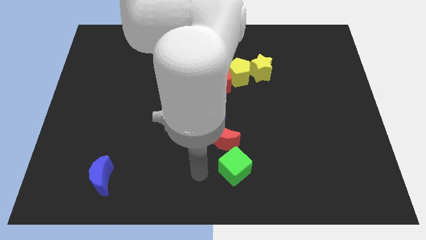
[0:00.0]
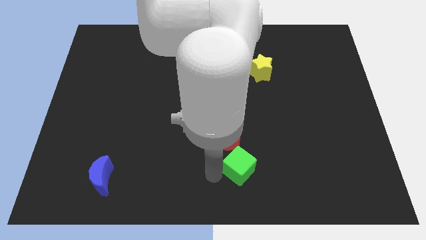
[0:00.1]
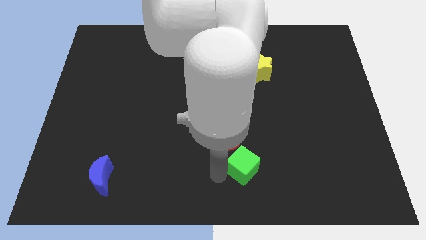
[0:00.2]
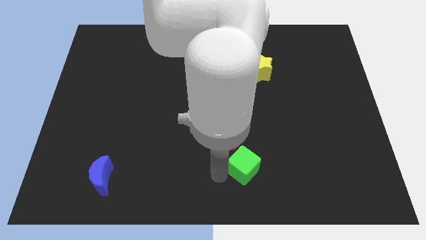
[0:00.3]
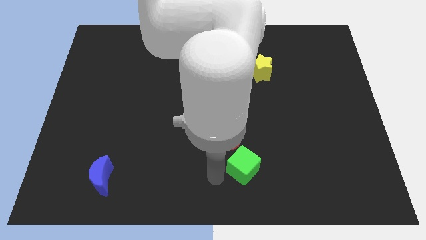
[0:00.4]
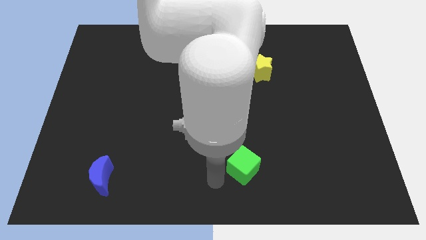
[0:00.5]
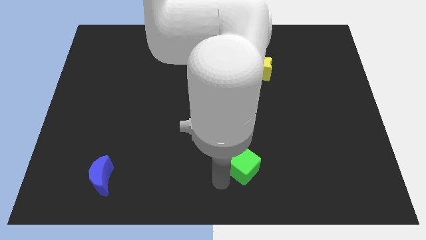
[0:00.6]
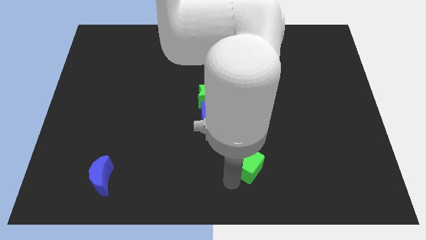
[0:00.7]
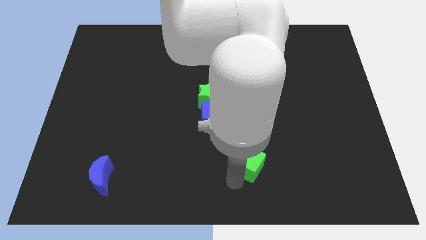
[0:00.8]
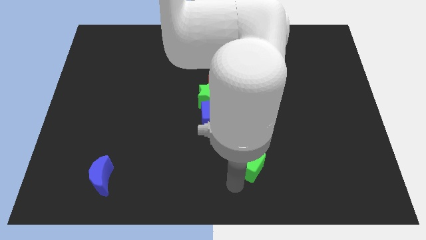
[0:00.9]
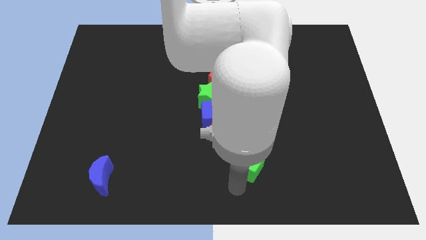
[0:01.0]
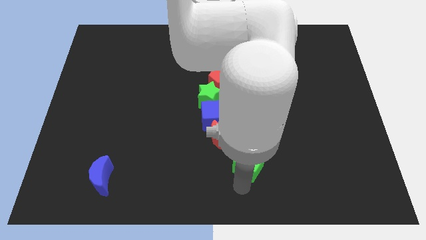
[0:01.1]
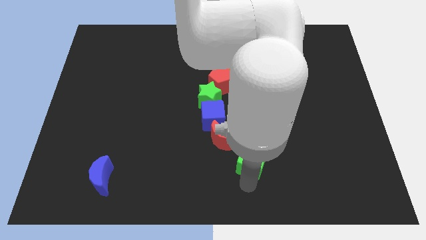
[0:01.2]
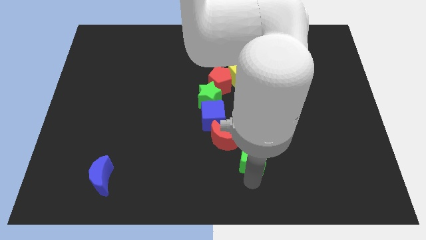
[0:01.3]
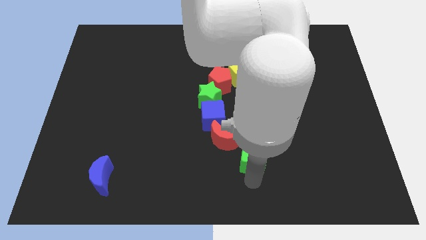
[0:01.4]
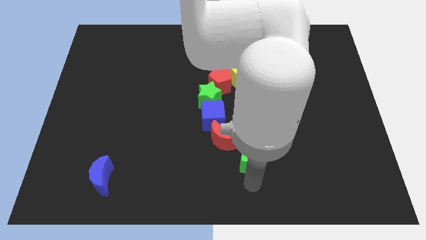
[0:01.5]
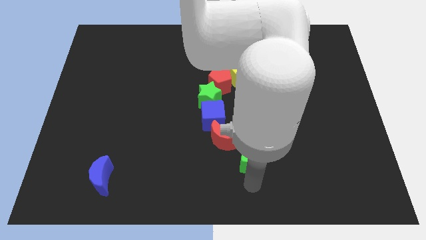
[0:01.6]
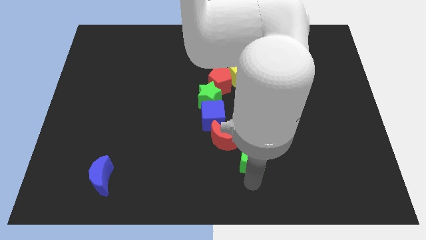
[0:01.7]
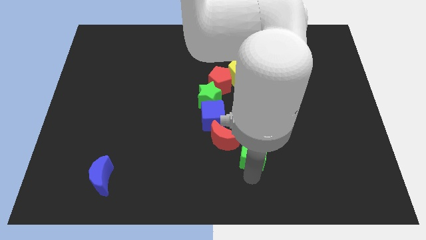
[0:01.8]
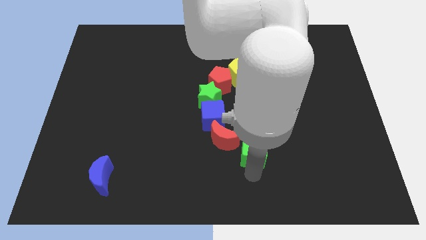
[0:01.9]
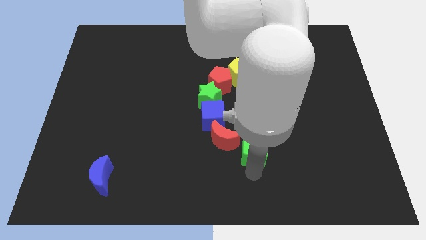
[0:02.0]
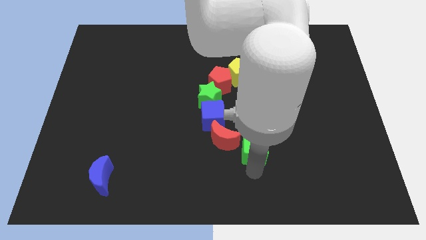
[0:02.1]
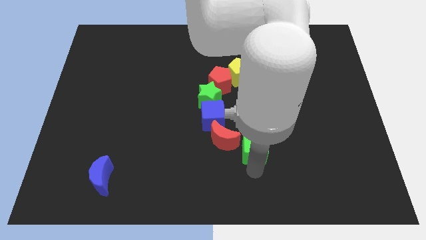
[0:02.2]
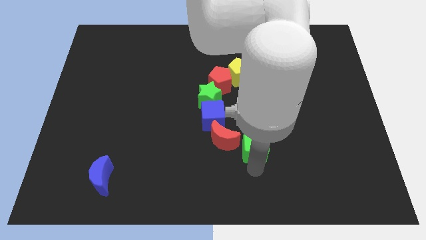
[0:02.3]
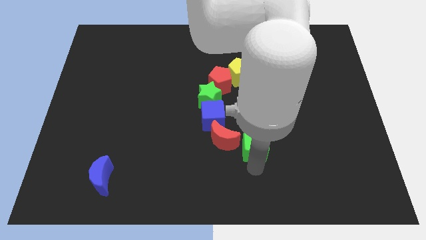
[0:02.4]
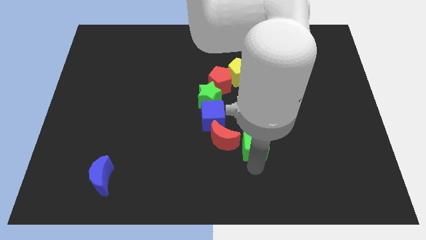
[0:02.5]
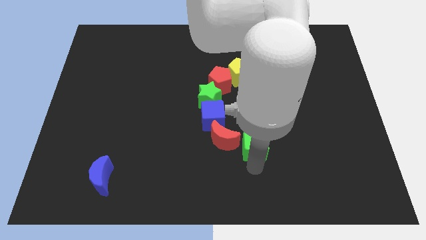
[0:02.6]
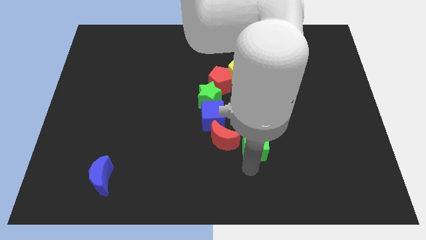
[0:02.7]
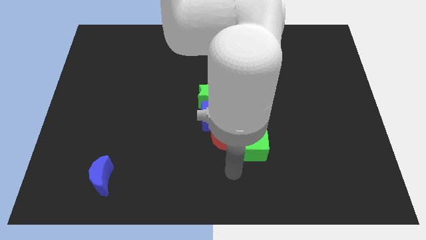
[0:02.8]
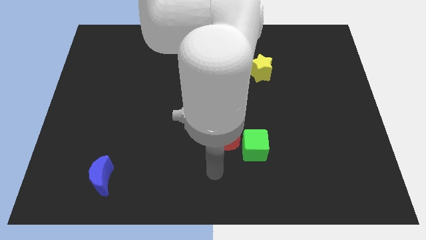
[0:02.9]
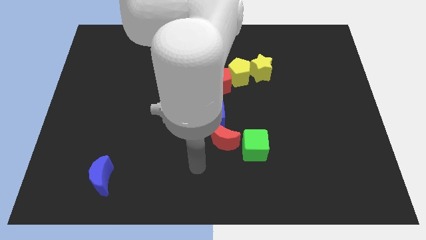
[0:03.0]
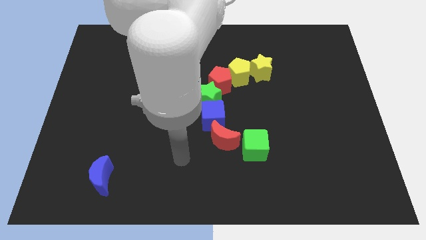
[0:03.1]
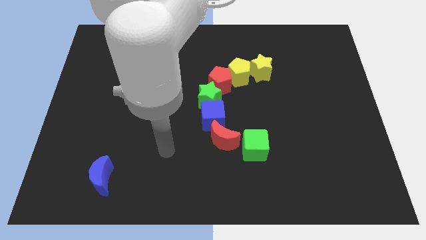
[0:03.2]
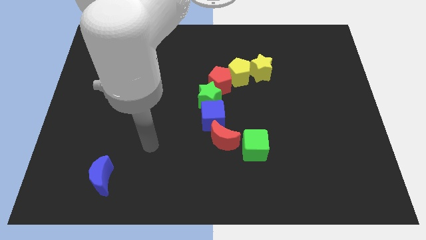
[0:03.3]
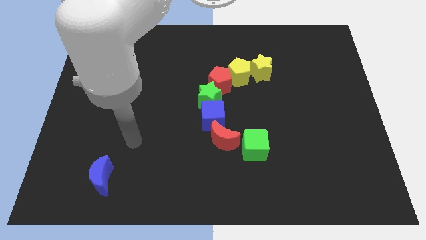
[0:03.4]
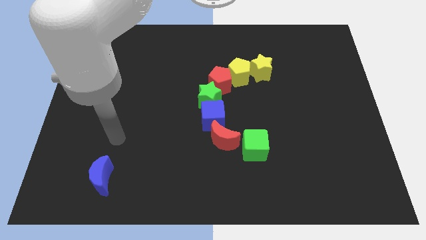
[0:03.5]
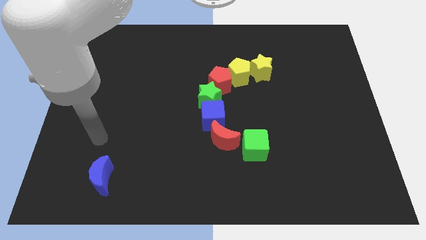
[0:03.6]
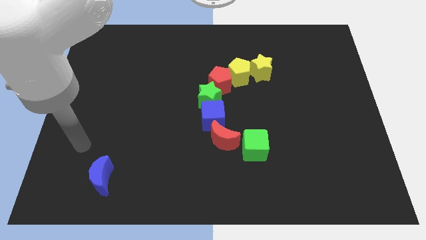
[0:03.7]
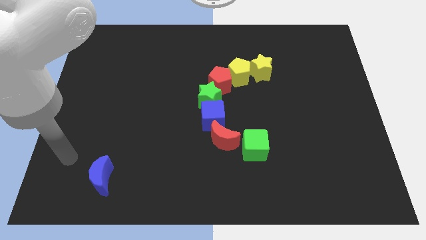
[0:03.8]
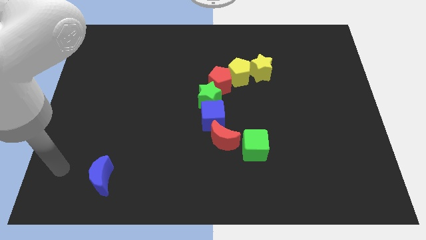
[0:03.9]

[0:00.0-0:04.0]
drag the green cube right to the red moon

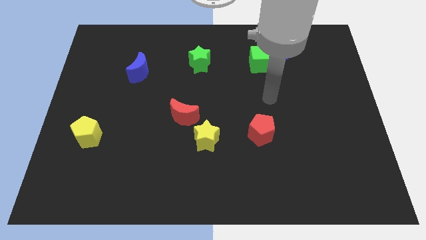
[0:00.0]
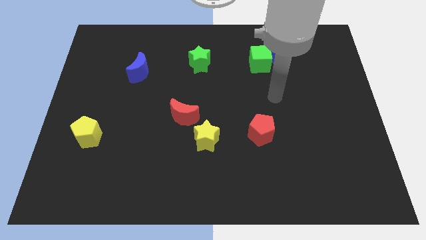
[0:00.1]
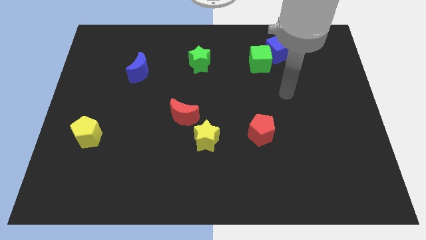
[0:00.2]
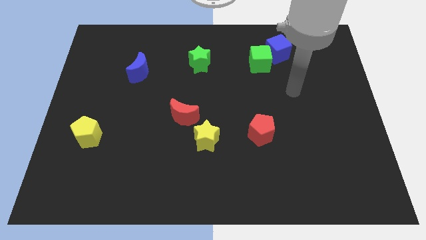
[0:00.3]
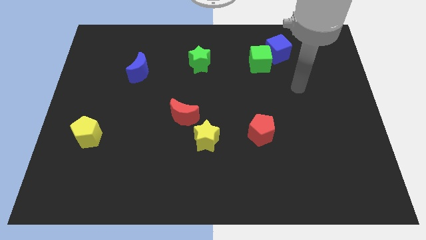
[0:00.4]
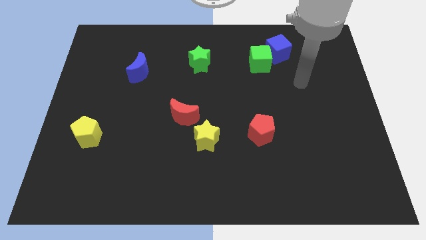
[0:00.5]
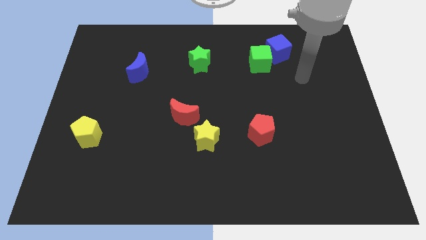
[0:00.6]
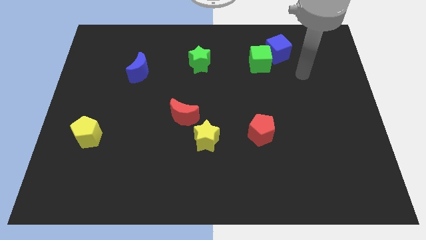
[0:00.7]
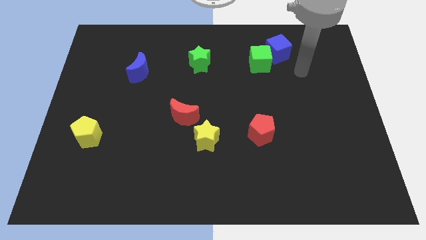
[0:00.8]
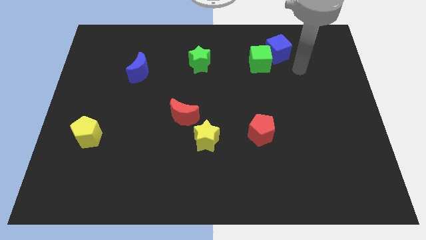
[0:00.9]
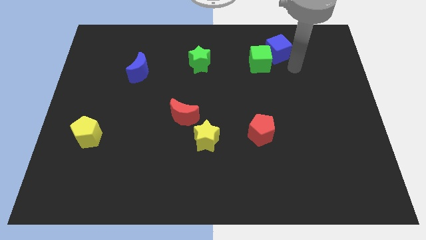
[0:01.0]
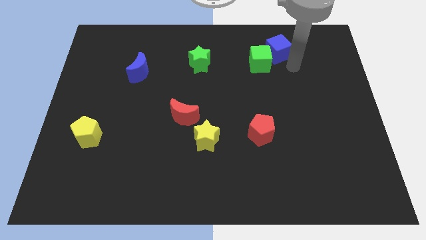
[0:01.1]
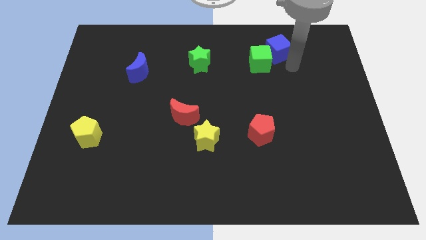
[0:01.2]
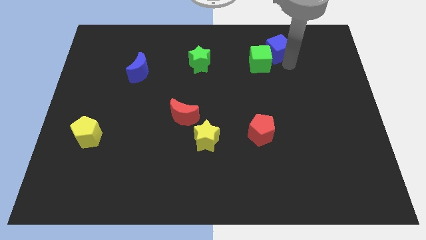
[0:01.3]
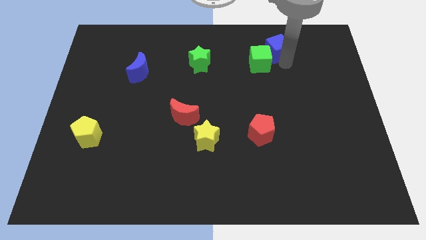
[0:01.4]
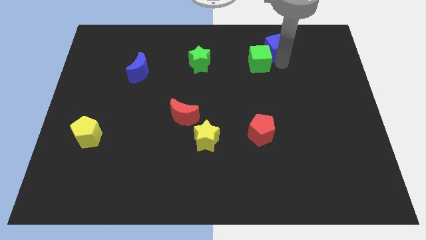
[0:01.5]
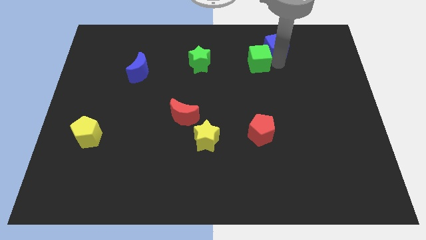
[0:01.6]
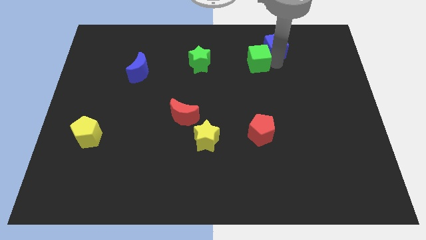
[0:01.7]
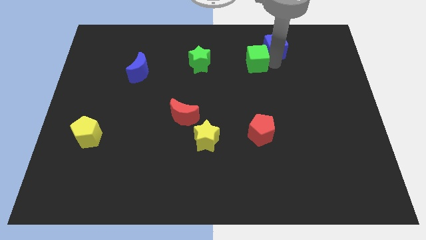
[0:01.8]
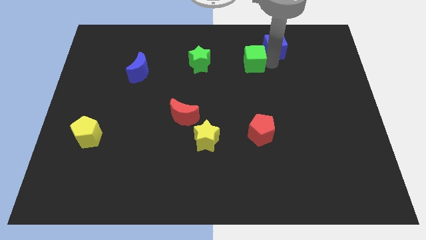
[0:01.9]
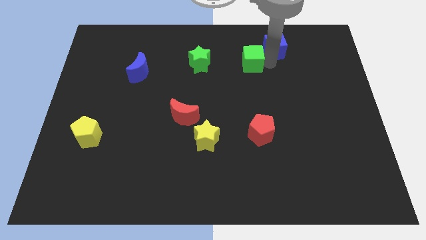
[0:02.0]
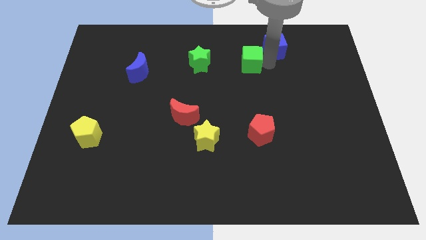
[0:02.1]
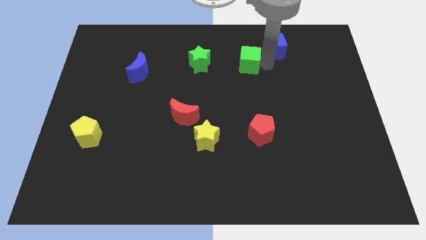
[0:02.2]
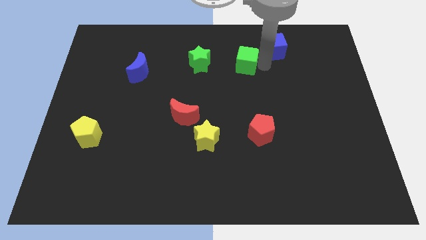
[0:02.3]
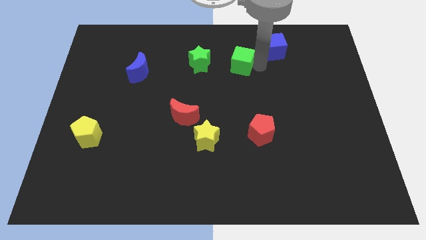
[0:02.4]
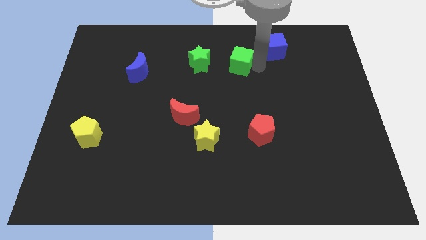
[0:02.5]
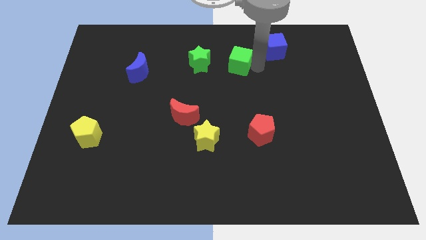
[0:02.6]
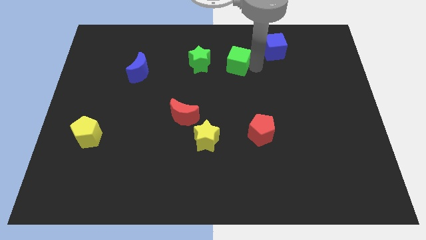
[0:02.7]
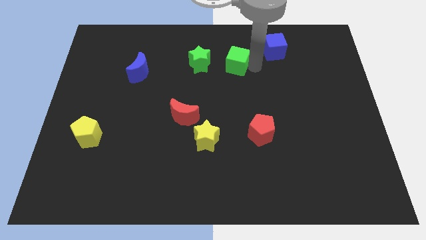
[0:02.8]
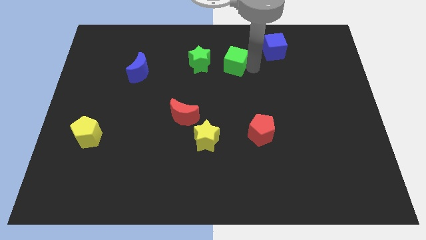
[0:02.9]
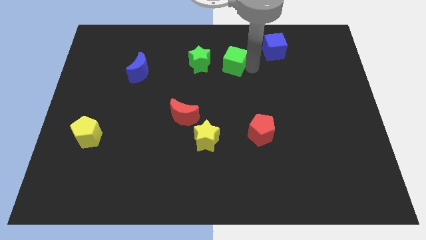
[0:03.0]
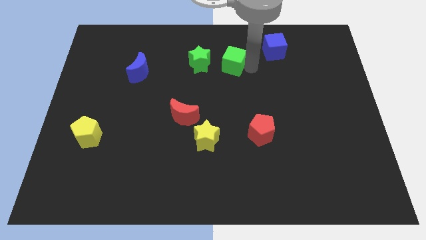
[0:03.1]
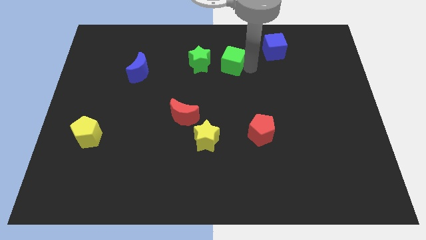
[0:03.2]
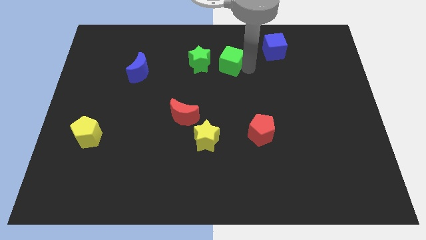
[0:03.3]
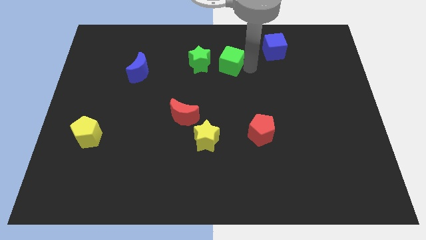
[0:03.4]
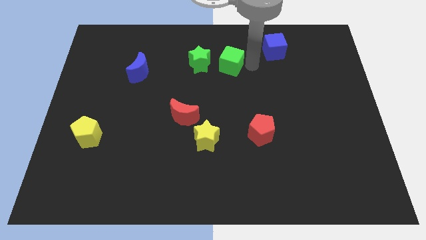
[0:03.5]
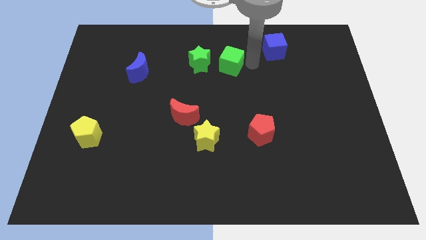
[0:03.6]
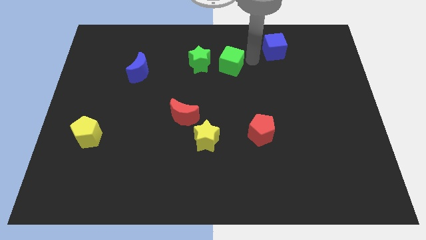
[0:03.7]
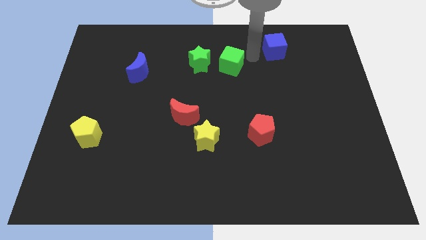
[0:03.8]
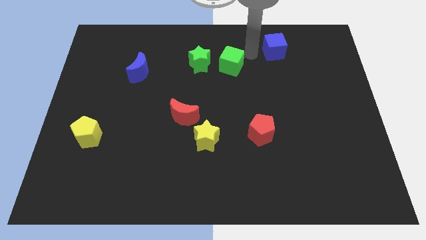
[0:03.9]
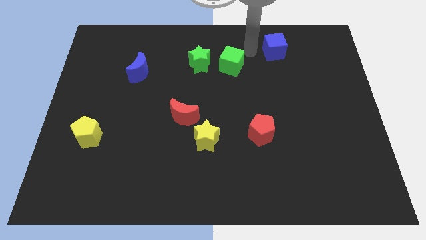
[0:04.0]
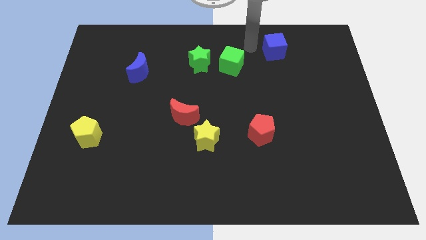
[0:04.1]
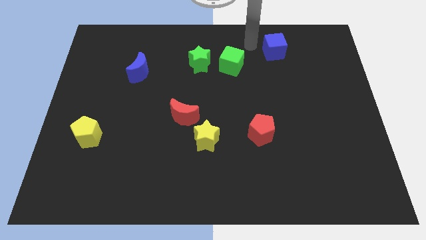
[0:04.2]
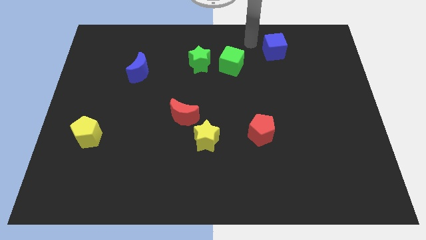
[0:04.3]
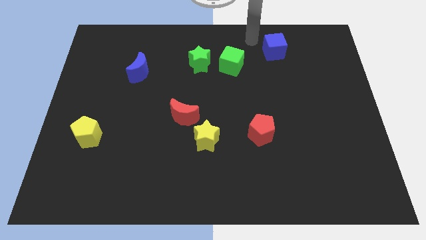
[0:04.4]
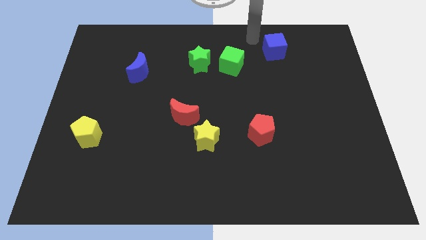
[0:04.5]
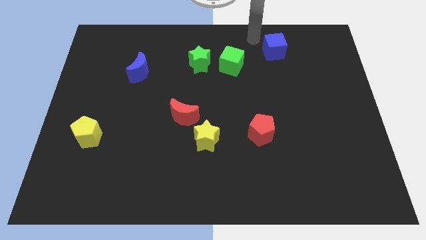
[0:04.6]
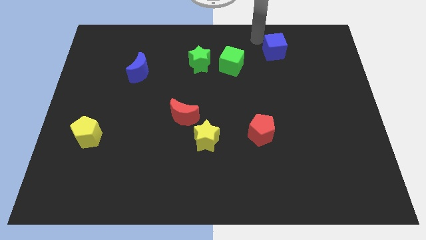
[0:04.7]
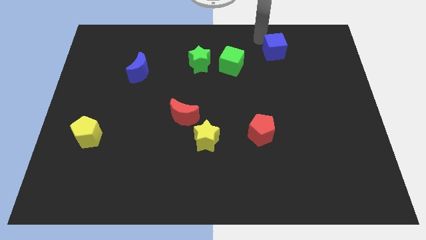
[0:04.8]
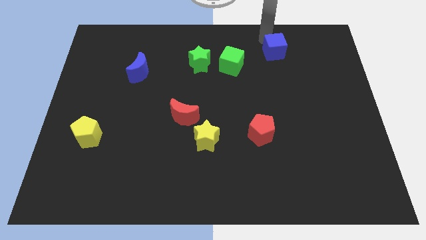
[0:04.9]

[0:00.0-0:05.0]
move the green cube to the right of the green star
